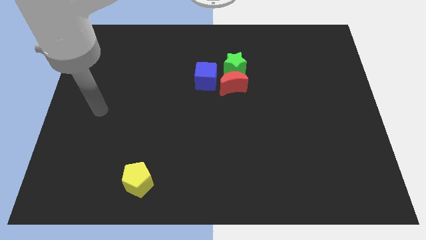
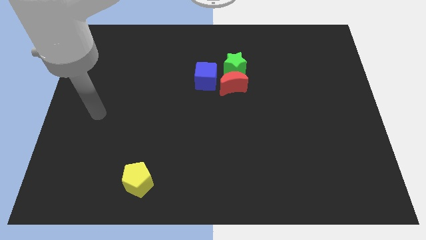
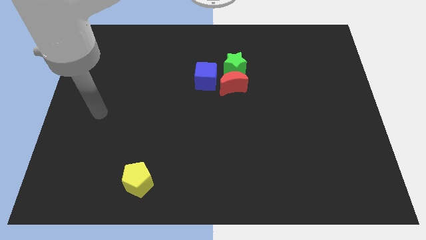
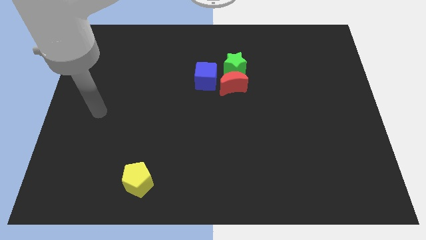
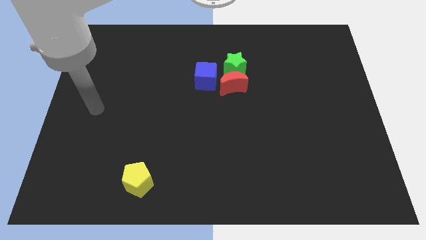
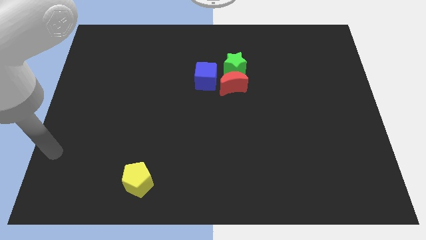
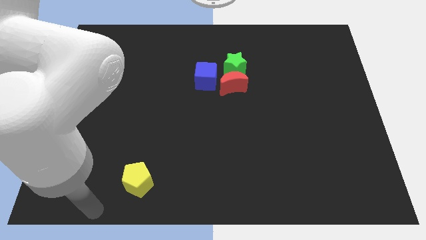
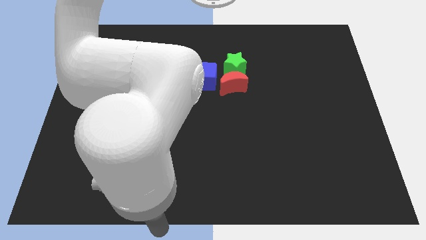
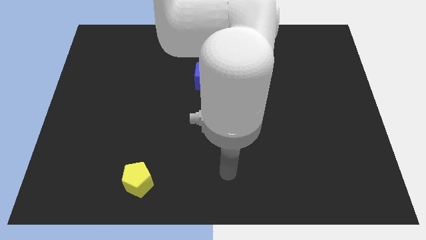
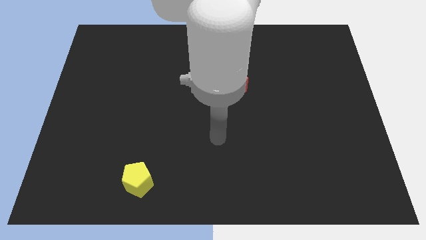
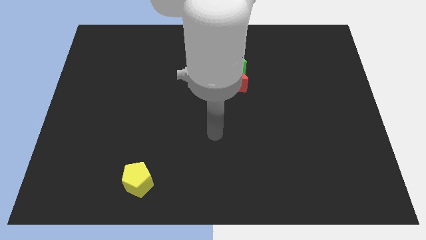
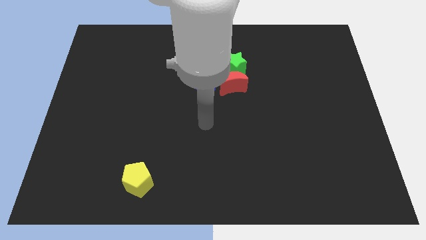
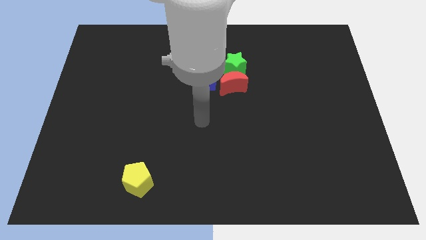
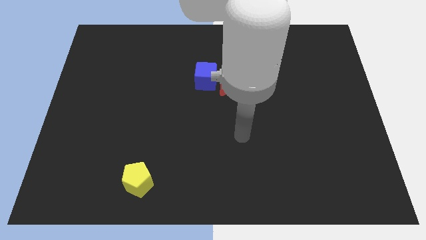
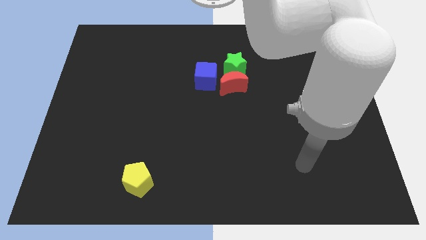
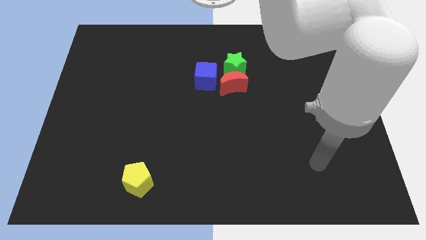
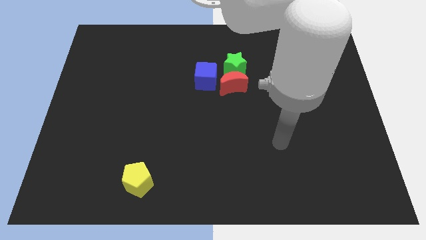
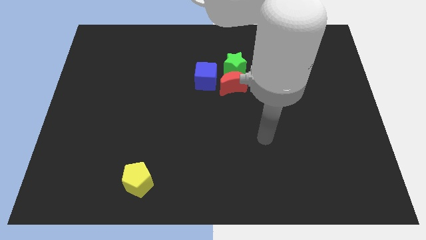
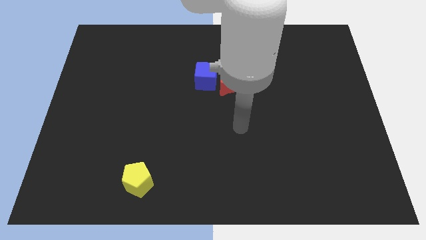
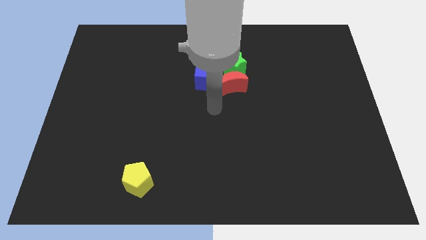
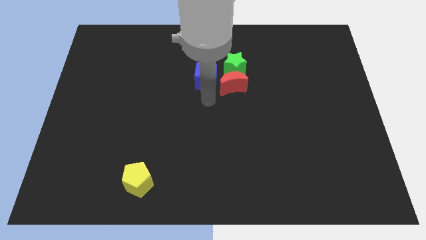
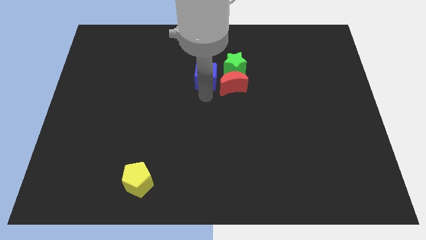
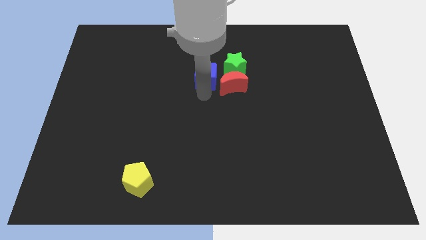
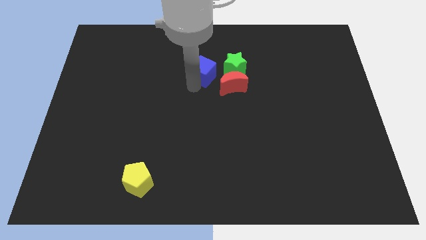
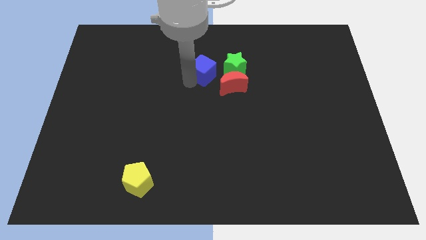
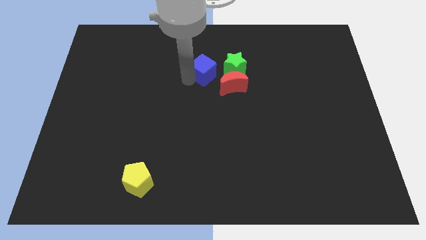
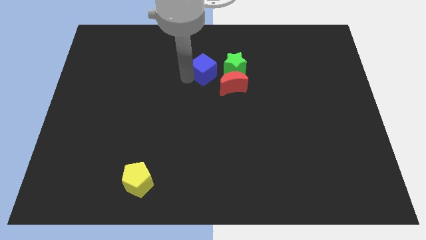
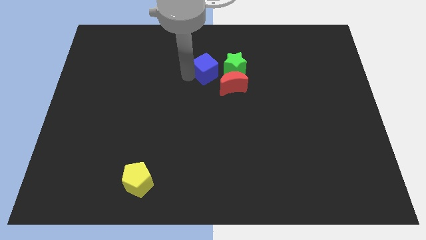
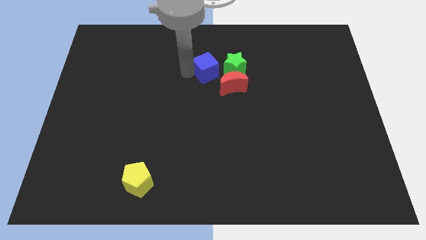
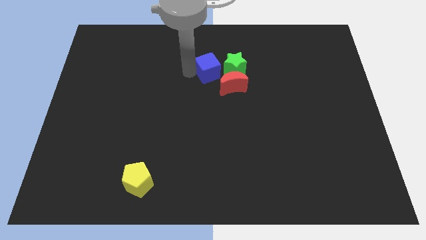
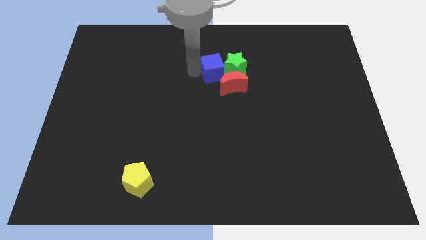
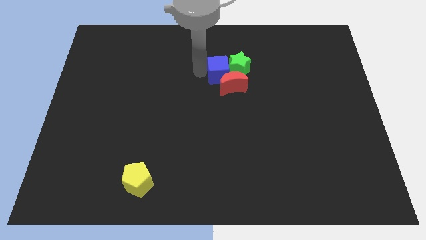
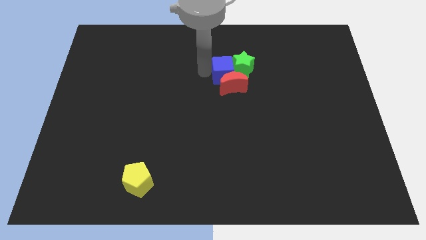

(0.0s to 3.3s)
push the blue block towards the green block

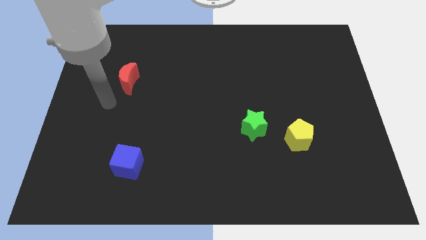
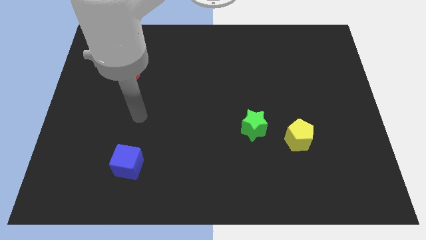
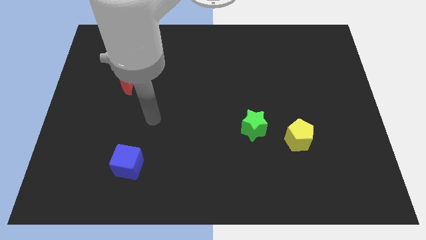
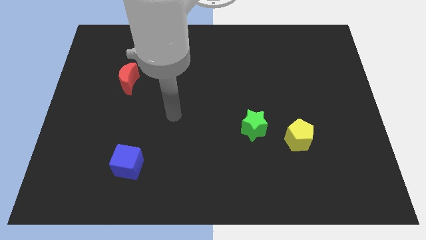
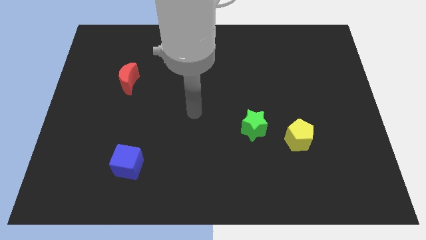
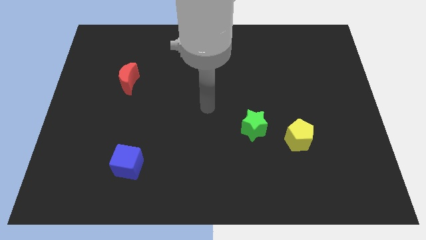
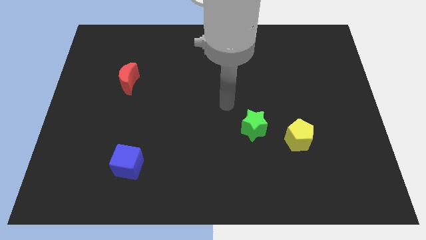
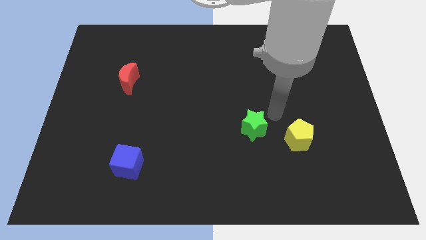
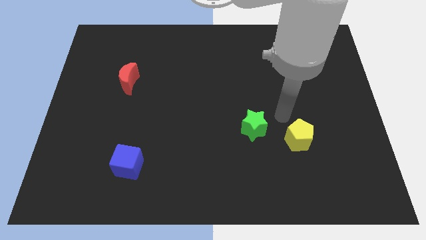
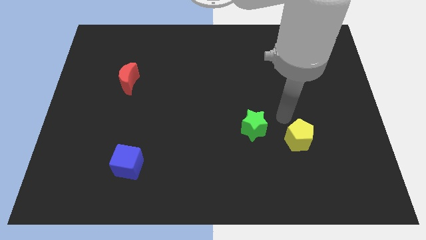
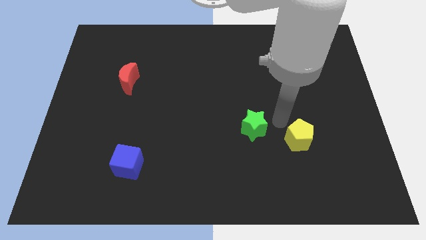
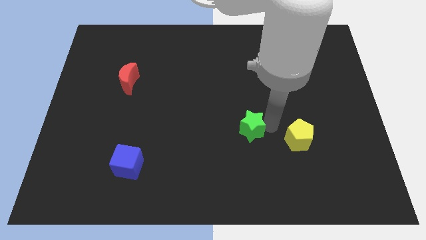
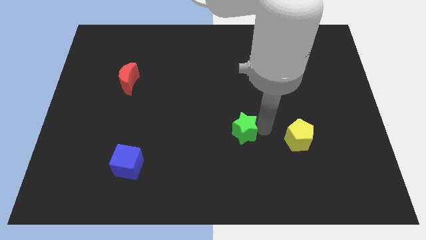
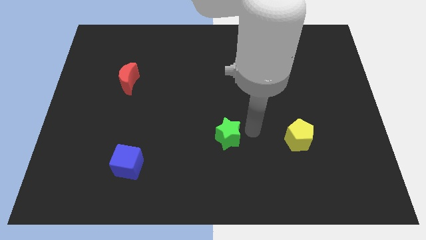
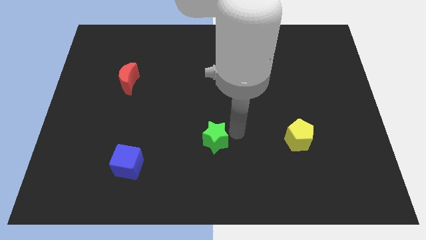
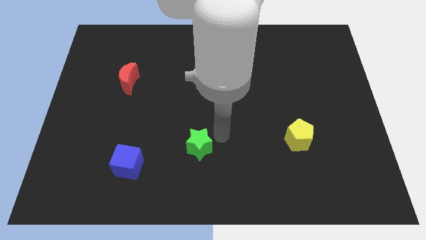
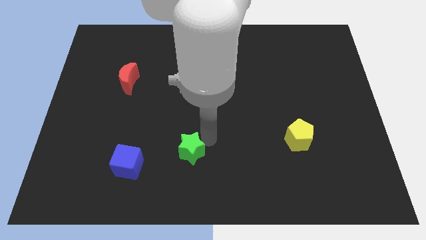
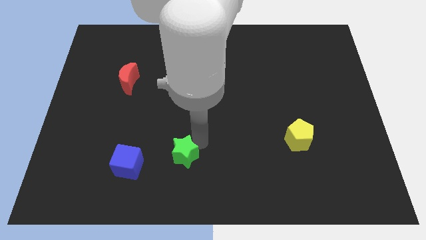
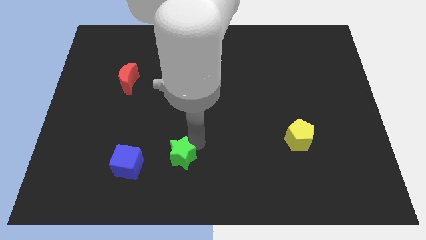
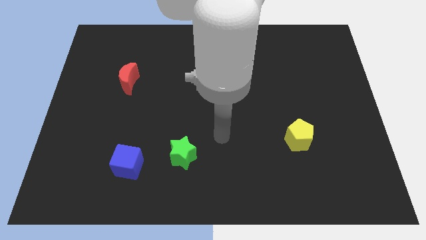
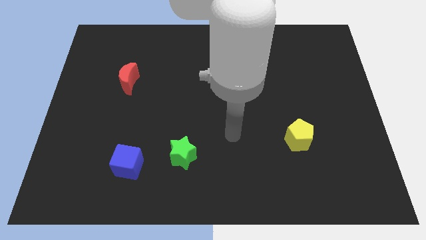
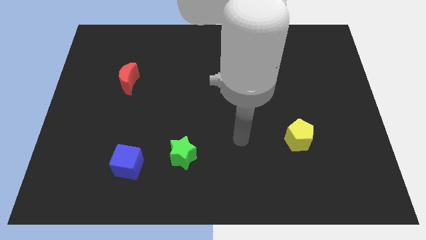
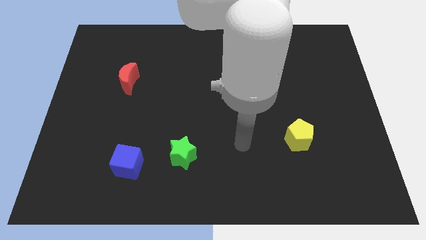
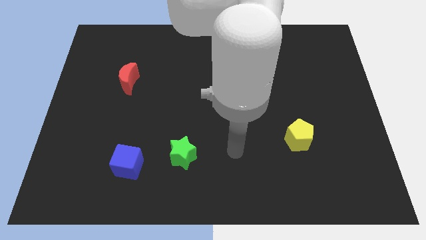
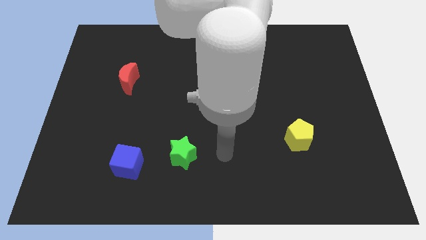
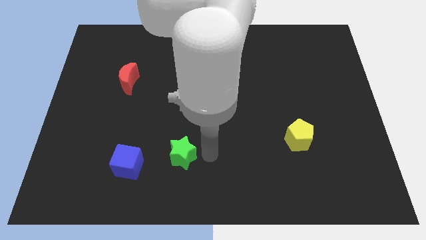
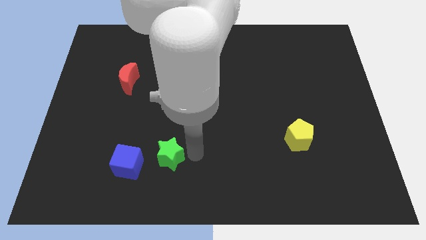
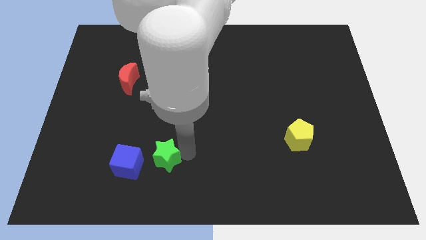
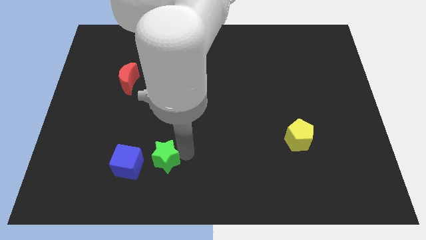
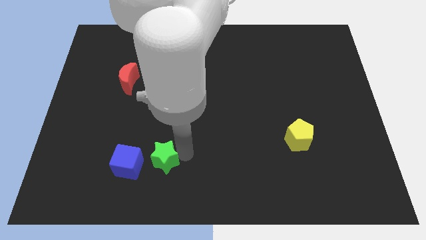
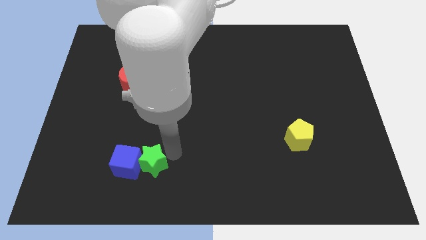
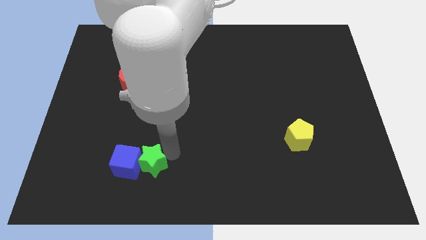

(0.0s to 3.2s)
put the star next to the blue block

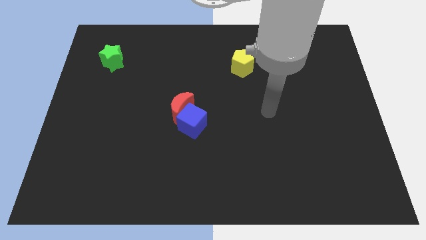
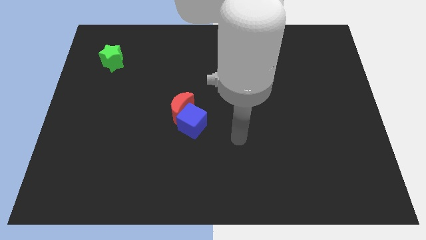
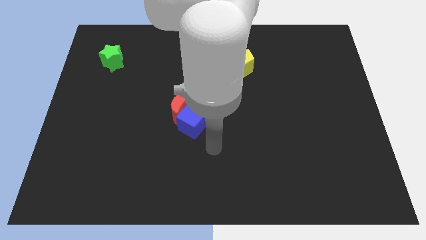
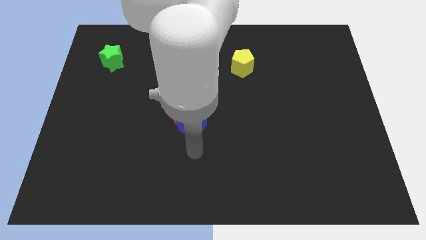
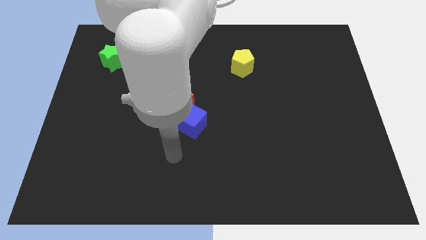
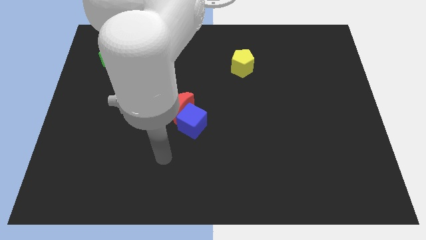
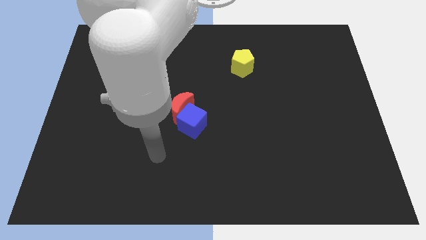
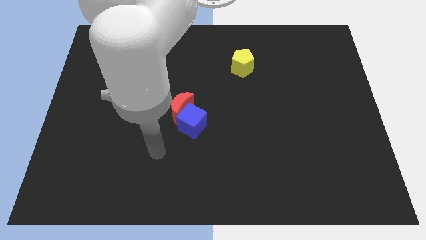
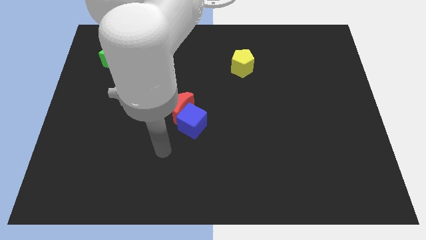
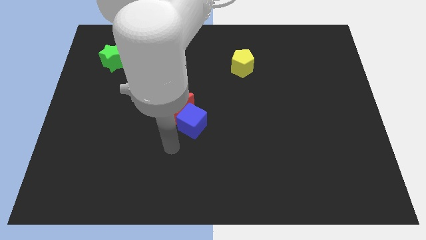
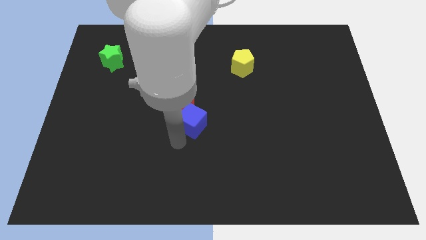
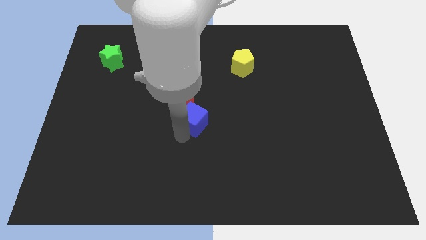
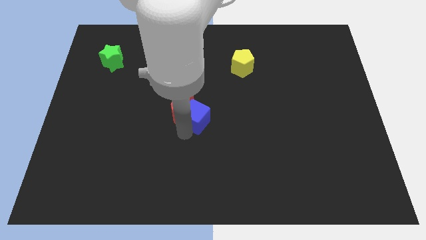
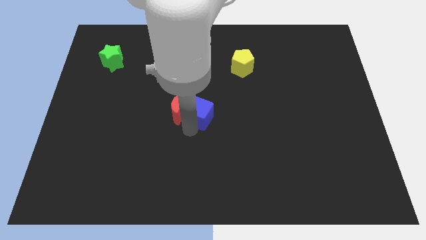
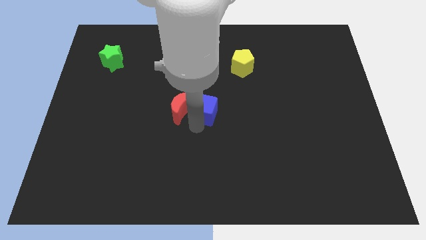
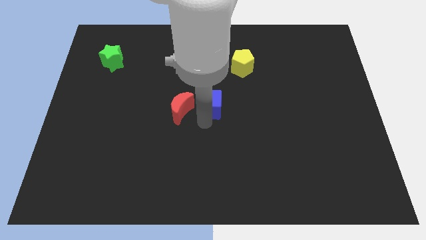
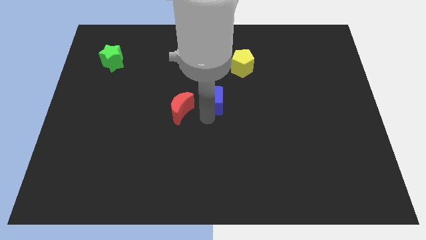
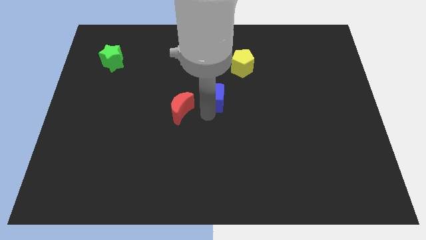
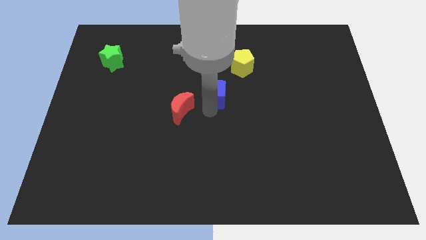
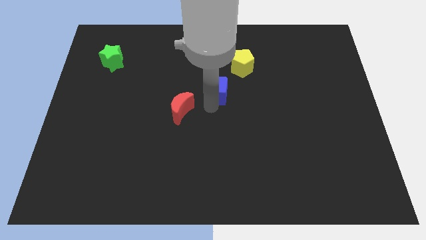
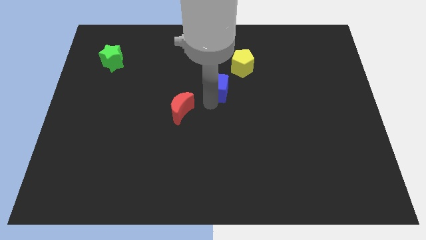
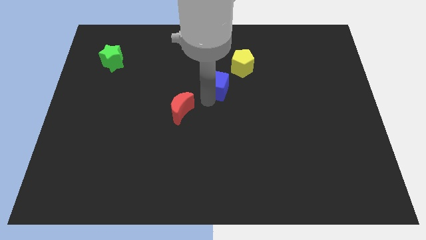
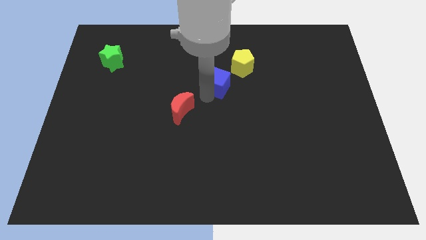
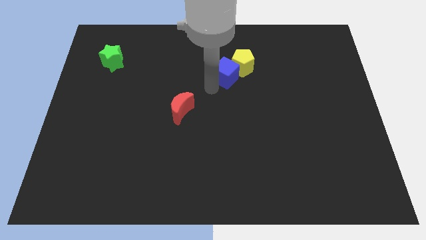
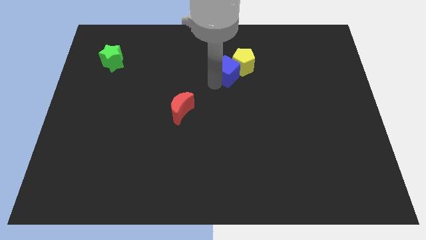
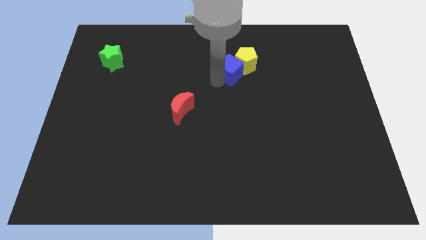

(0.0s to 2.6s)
move the blue block close to the yellow block
